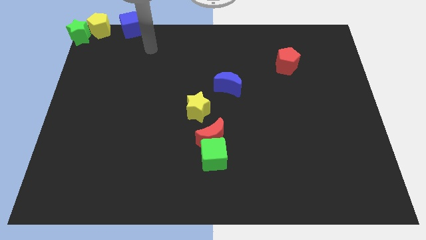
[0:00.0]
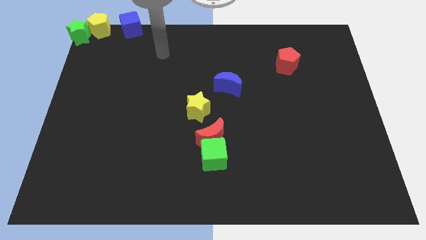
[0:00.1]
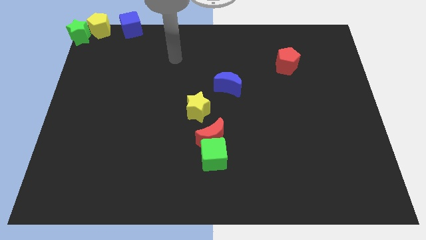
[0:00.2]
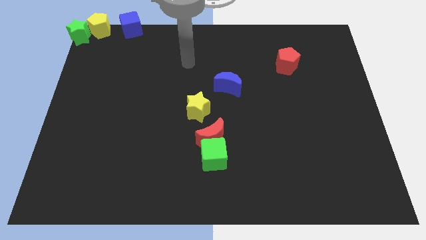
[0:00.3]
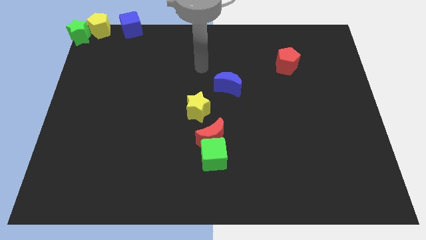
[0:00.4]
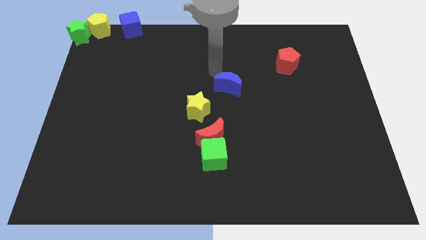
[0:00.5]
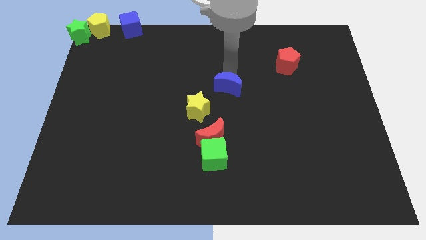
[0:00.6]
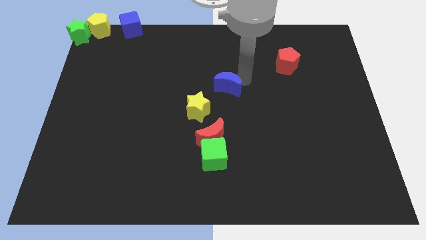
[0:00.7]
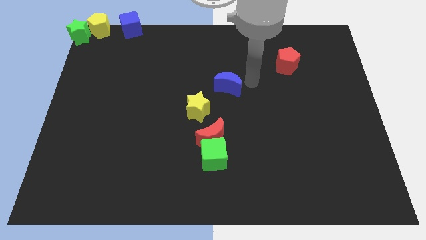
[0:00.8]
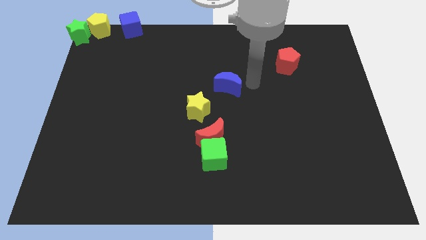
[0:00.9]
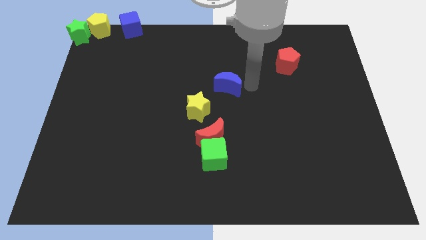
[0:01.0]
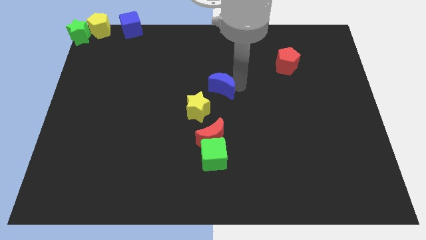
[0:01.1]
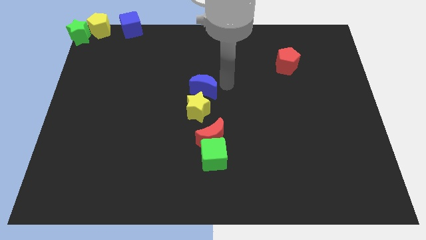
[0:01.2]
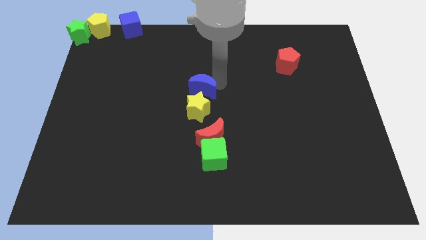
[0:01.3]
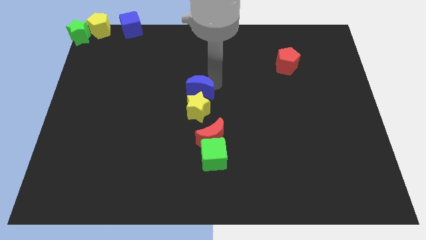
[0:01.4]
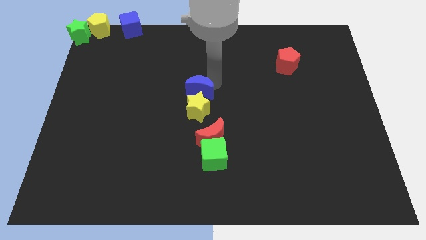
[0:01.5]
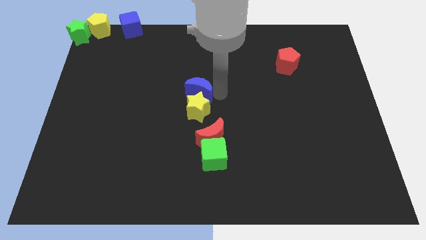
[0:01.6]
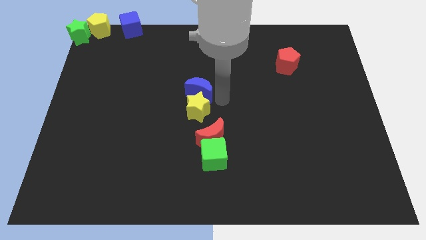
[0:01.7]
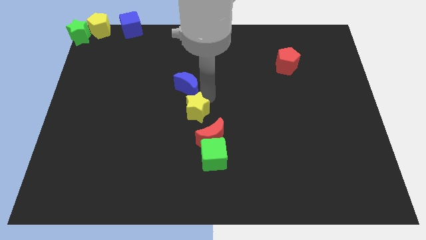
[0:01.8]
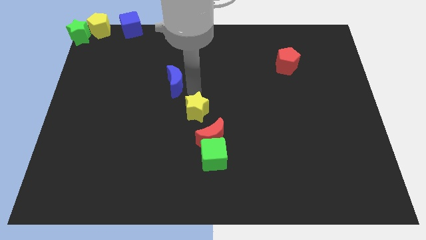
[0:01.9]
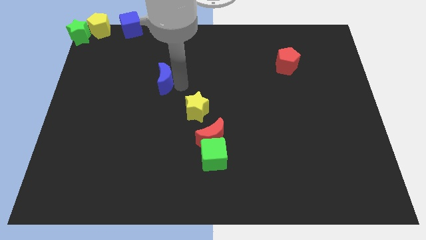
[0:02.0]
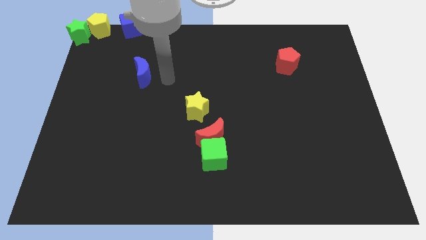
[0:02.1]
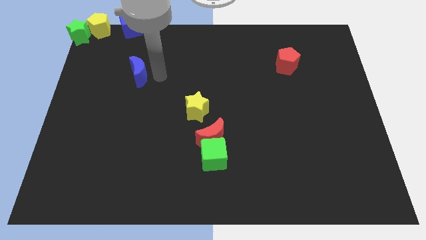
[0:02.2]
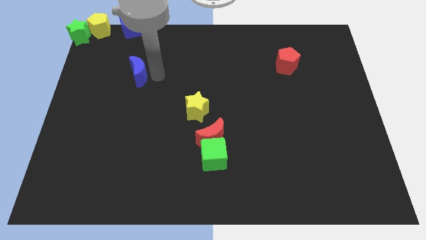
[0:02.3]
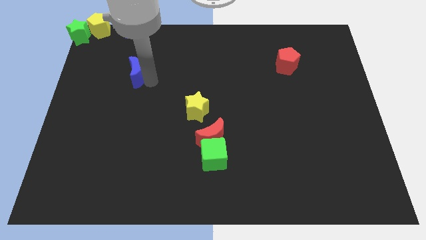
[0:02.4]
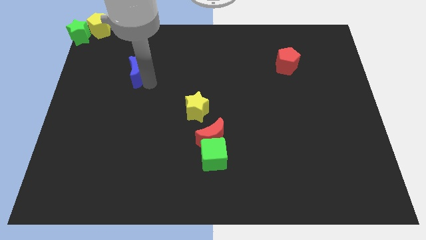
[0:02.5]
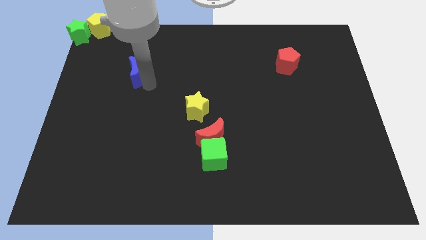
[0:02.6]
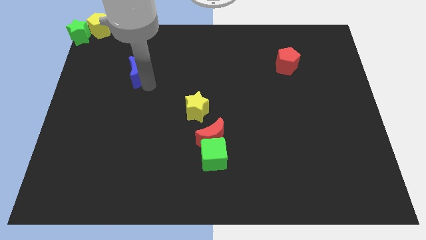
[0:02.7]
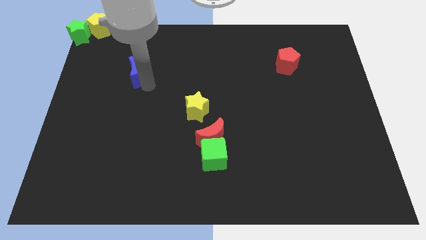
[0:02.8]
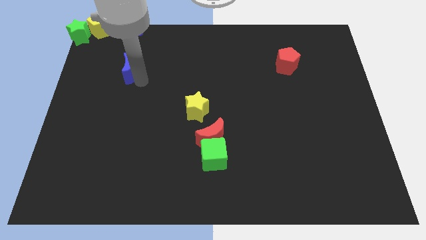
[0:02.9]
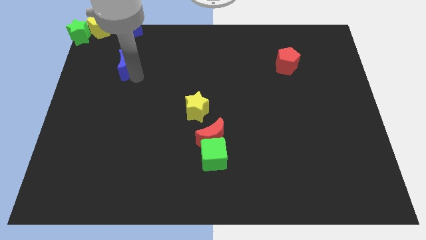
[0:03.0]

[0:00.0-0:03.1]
push the blue crescent parallel to the bottom of the blue cube

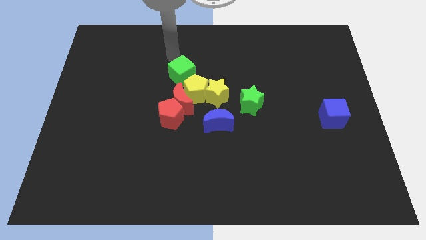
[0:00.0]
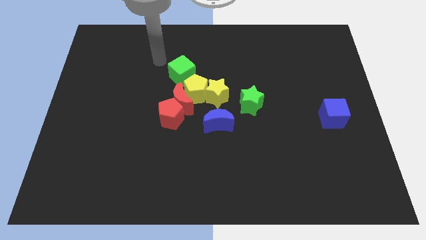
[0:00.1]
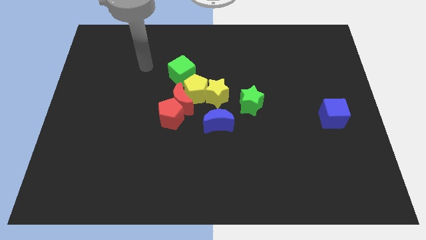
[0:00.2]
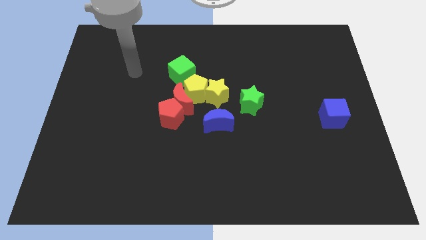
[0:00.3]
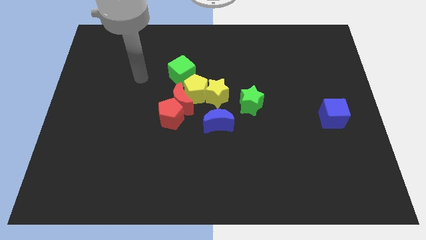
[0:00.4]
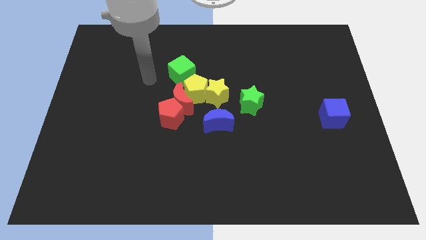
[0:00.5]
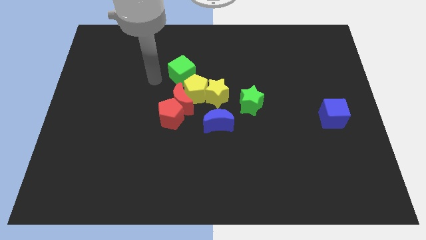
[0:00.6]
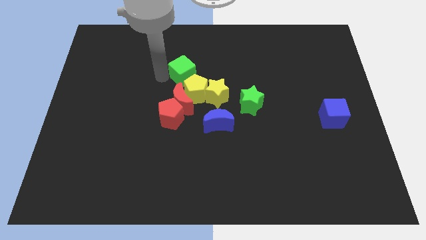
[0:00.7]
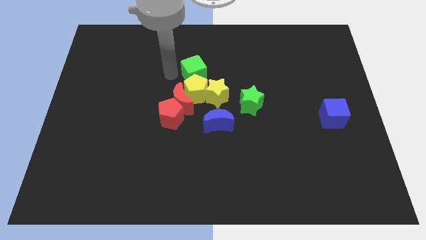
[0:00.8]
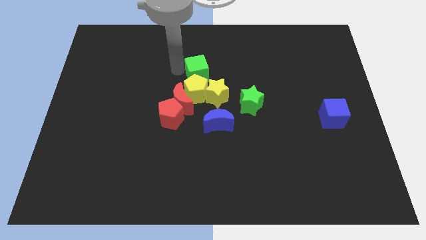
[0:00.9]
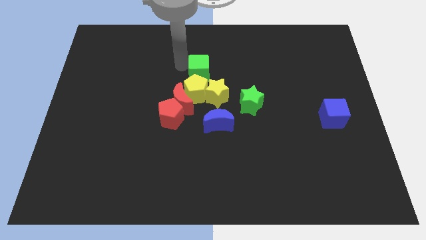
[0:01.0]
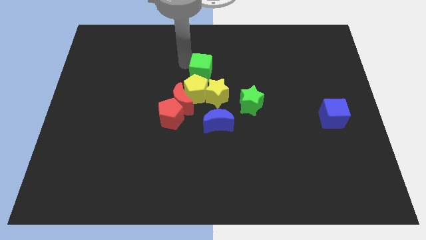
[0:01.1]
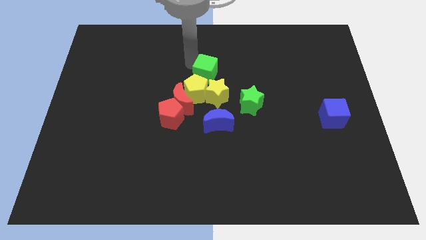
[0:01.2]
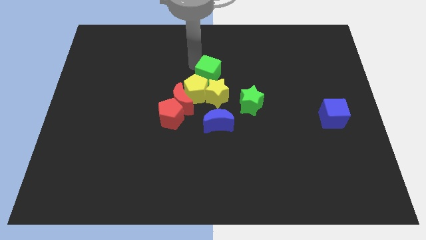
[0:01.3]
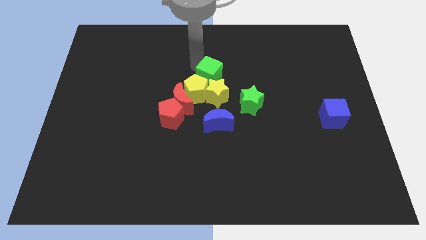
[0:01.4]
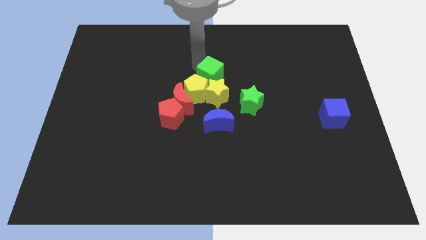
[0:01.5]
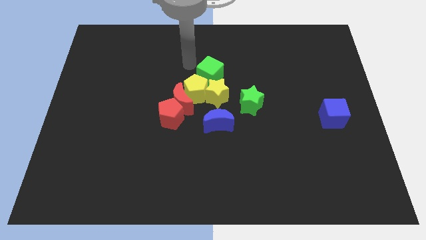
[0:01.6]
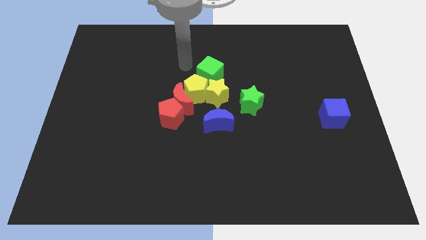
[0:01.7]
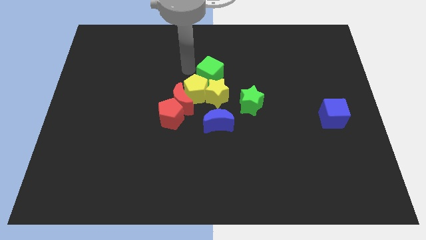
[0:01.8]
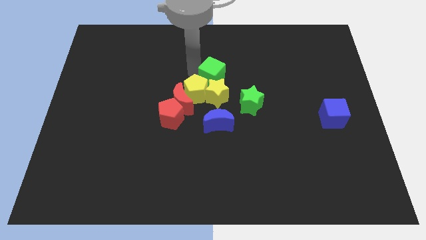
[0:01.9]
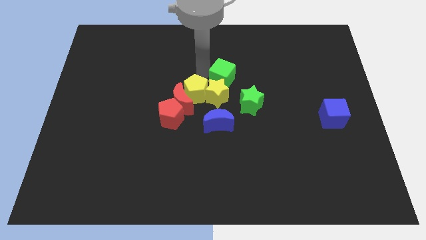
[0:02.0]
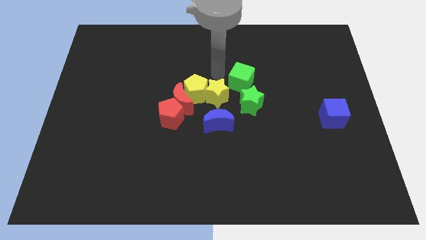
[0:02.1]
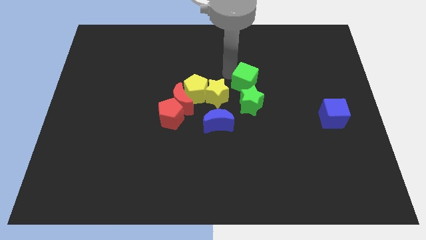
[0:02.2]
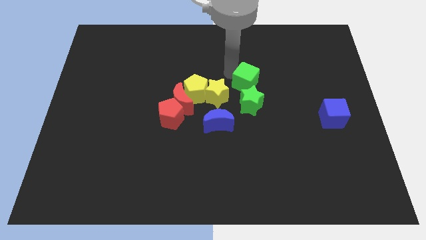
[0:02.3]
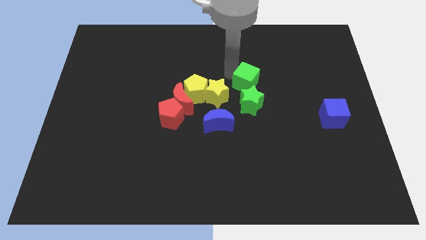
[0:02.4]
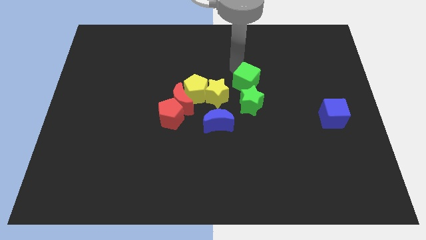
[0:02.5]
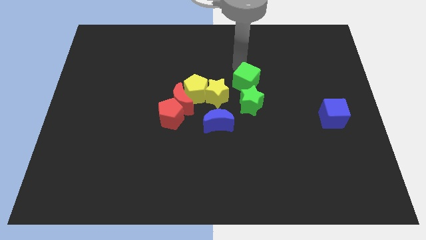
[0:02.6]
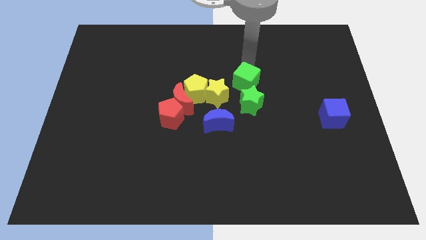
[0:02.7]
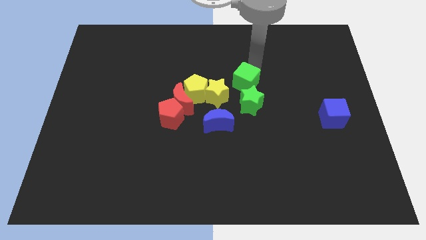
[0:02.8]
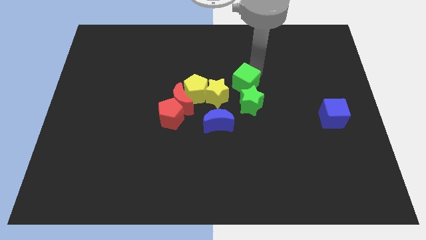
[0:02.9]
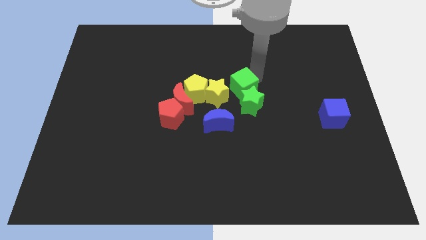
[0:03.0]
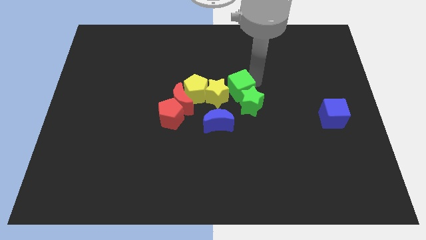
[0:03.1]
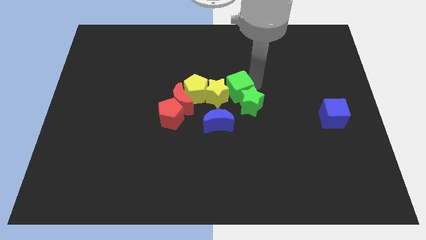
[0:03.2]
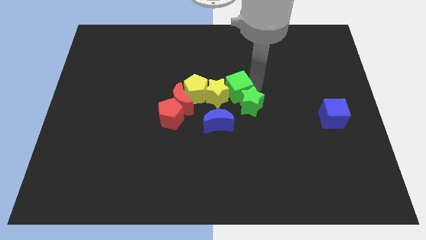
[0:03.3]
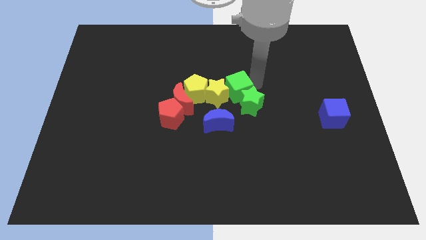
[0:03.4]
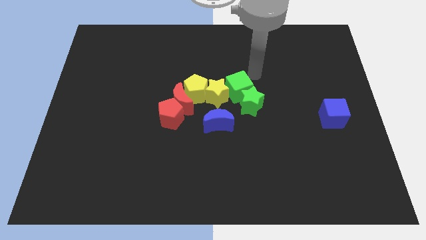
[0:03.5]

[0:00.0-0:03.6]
move the green cube to the center of board

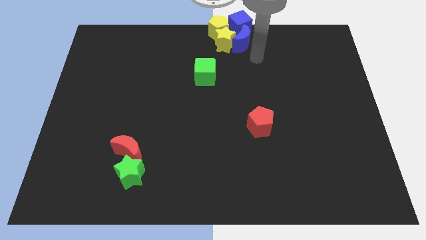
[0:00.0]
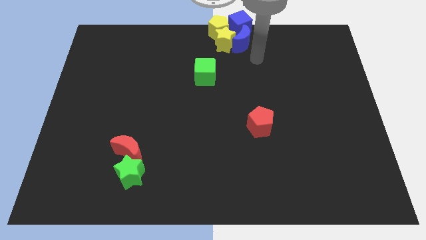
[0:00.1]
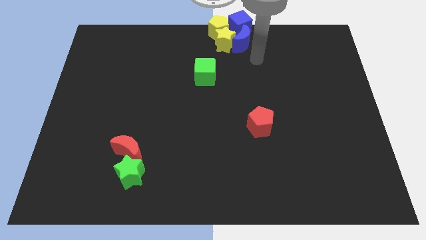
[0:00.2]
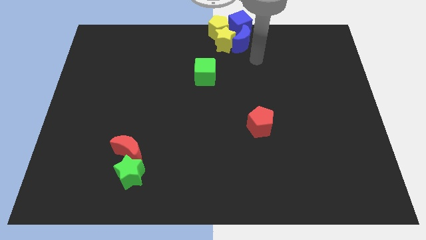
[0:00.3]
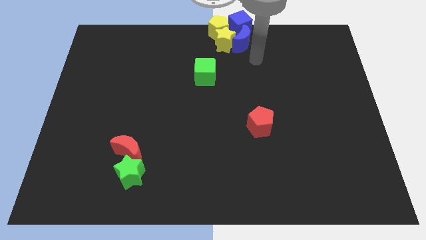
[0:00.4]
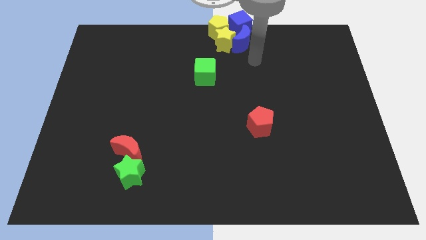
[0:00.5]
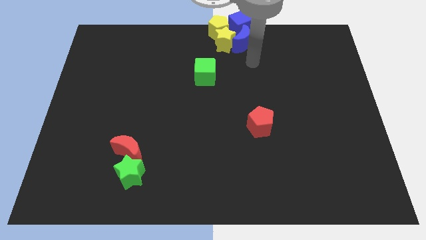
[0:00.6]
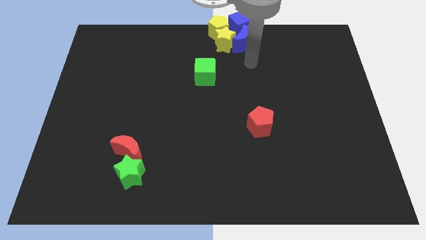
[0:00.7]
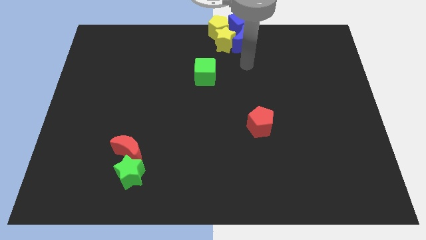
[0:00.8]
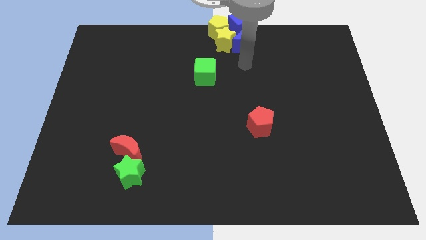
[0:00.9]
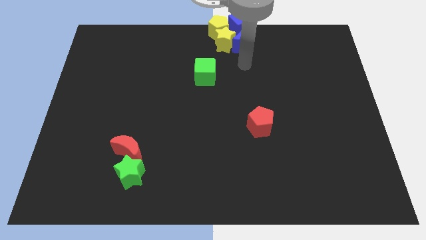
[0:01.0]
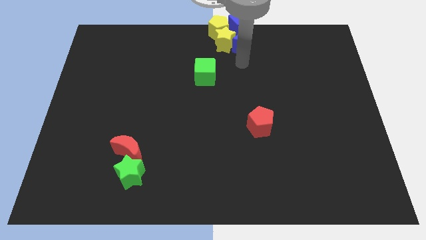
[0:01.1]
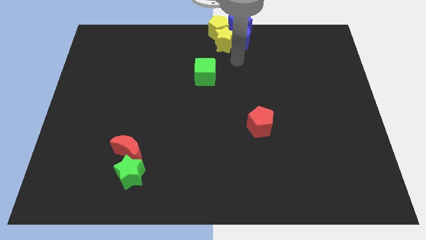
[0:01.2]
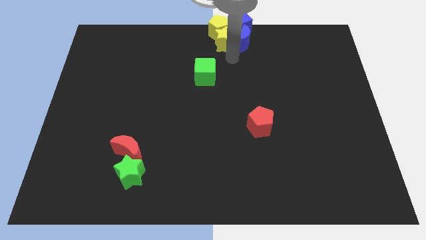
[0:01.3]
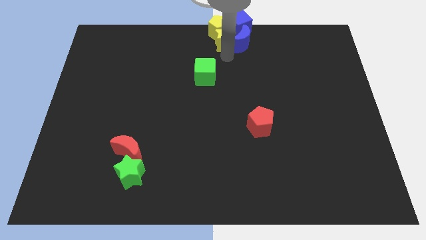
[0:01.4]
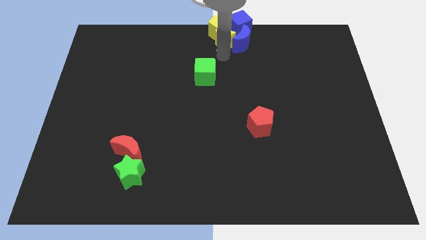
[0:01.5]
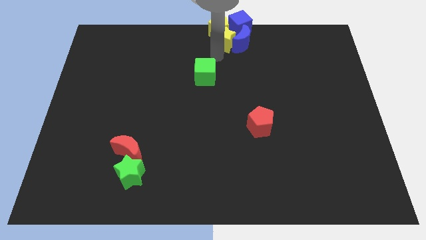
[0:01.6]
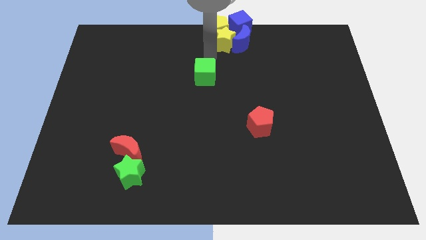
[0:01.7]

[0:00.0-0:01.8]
move the arm towards the left side of the yellow star

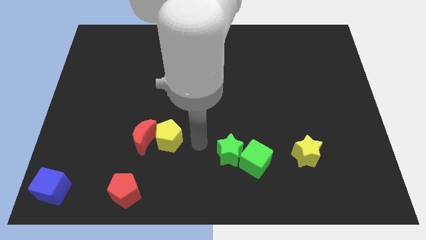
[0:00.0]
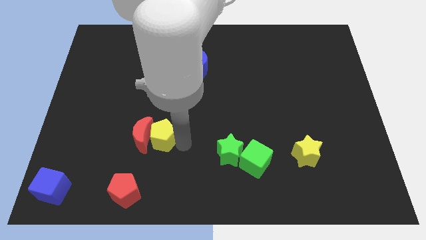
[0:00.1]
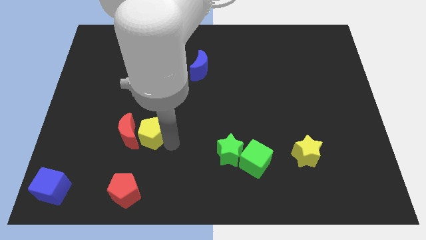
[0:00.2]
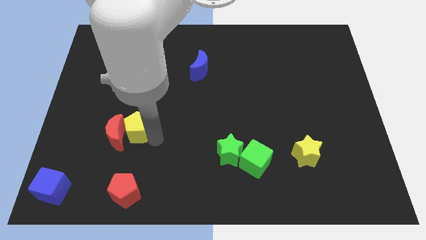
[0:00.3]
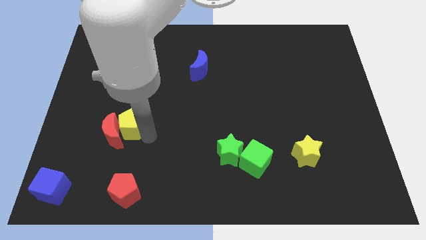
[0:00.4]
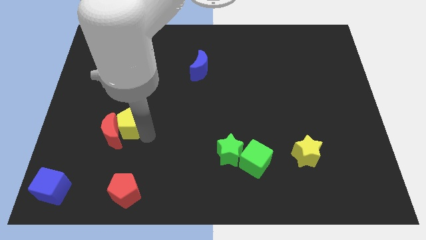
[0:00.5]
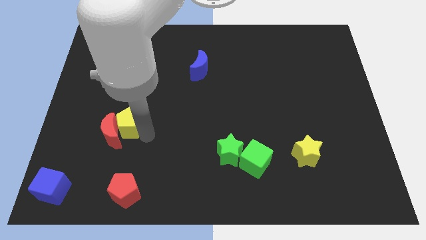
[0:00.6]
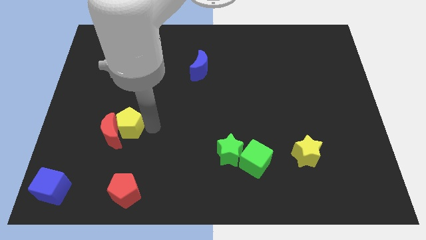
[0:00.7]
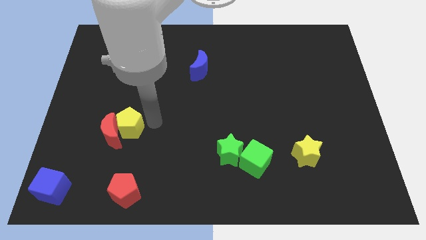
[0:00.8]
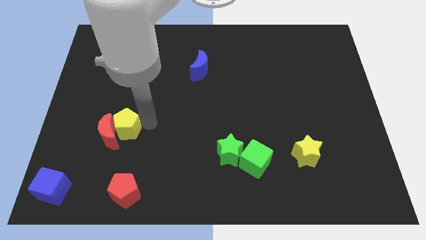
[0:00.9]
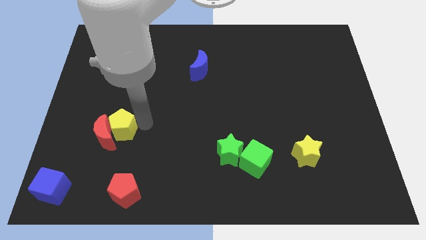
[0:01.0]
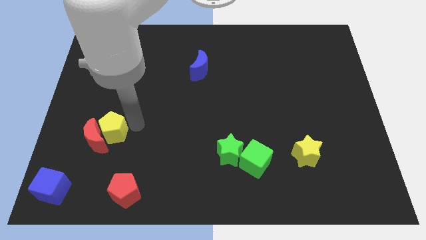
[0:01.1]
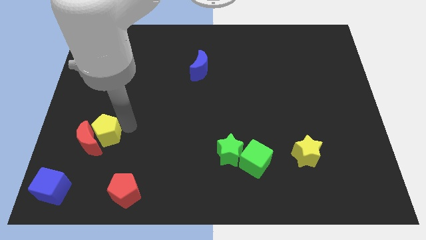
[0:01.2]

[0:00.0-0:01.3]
move yellow pentagon and the red moon to the left
